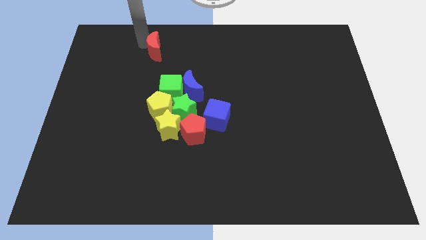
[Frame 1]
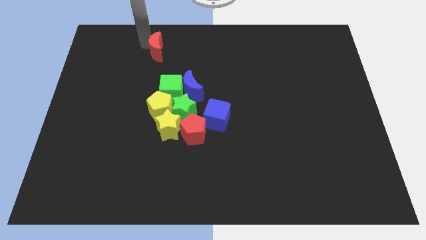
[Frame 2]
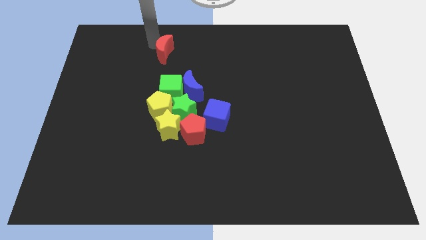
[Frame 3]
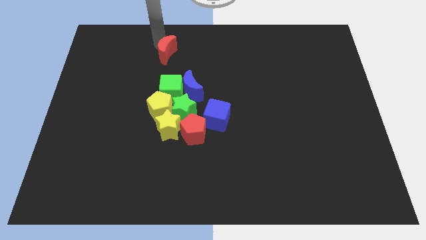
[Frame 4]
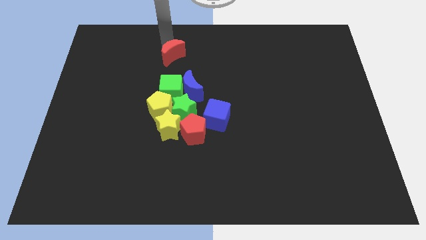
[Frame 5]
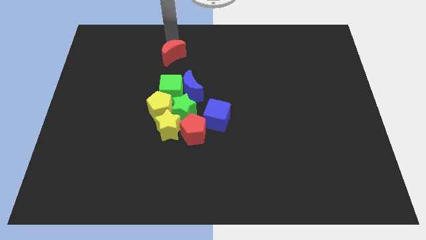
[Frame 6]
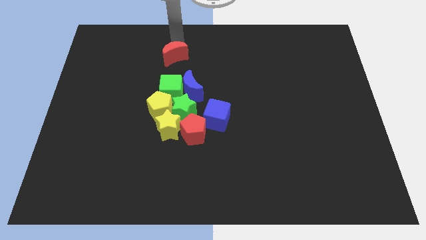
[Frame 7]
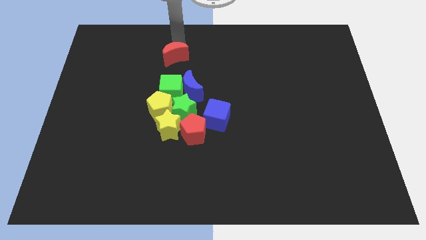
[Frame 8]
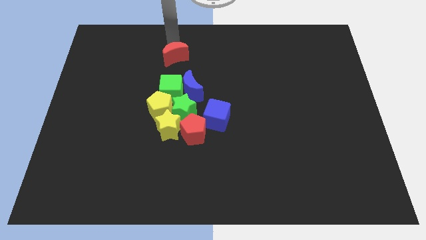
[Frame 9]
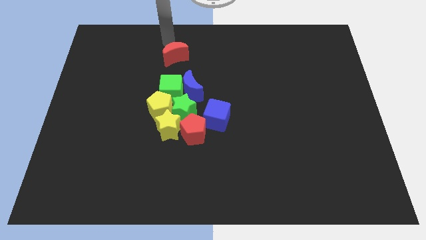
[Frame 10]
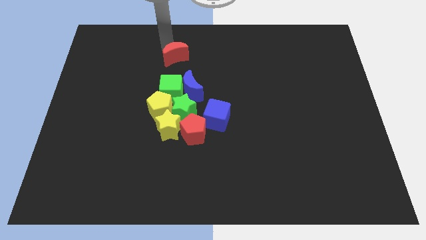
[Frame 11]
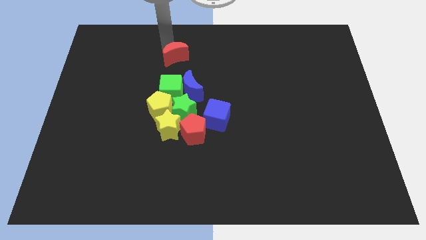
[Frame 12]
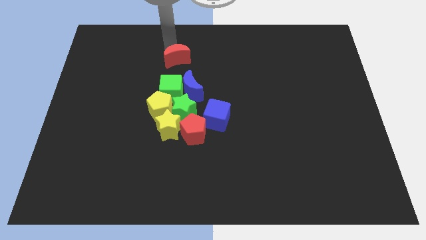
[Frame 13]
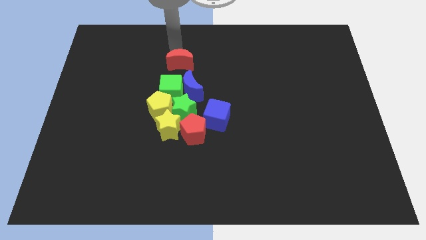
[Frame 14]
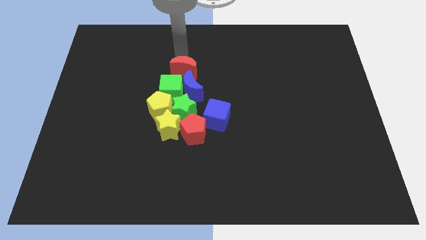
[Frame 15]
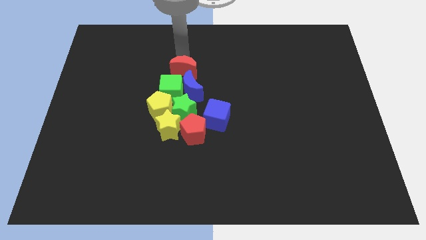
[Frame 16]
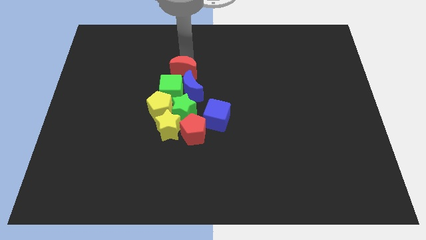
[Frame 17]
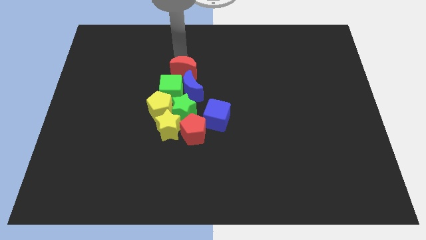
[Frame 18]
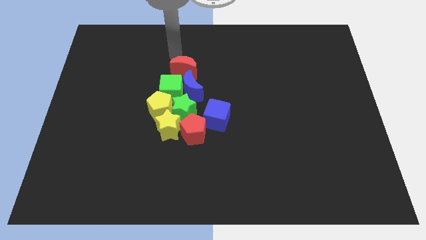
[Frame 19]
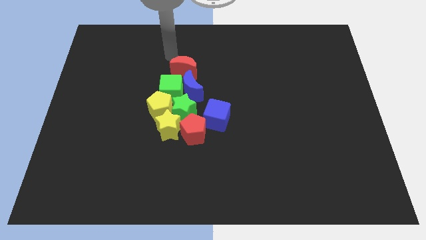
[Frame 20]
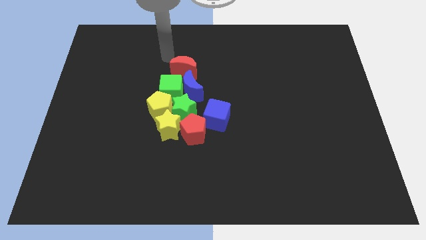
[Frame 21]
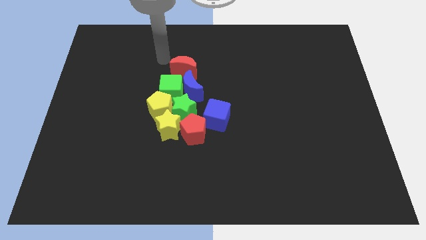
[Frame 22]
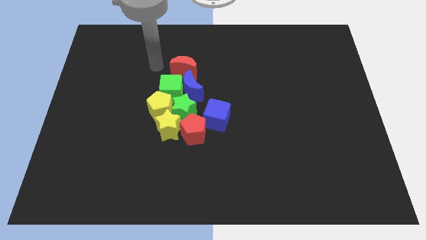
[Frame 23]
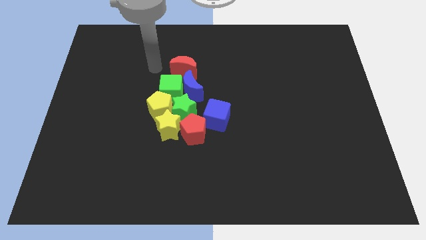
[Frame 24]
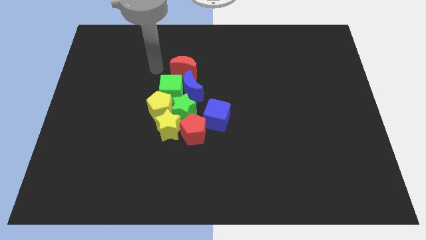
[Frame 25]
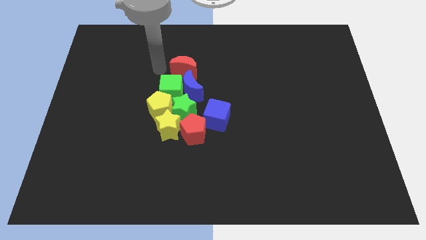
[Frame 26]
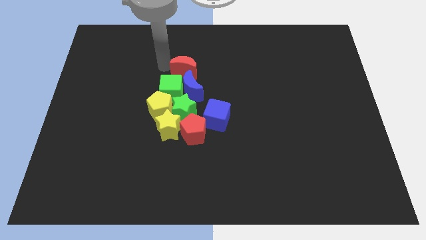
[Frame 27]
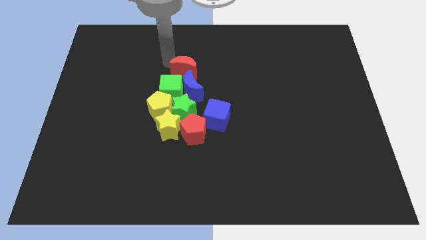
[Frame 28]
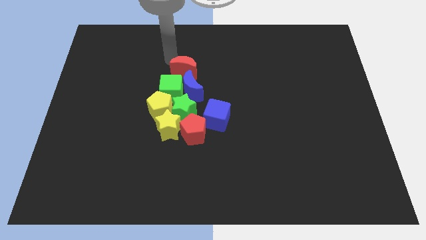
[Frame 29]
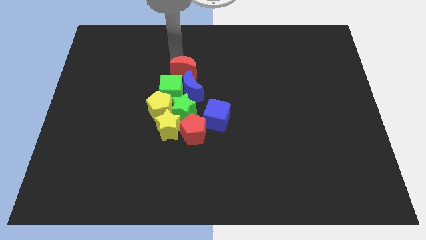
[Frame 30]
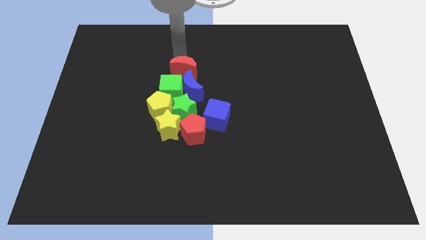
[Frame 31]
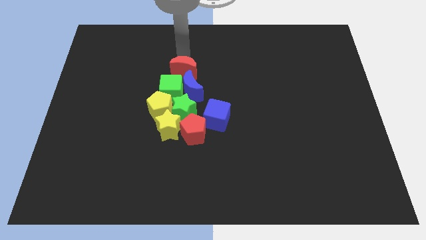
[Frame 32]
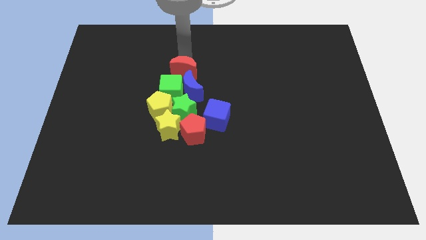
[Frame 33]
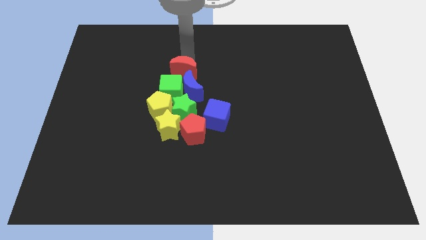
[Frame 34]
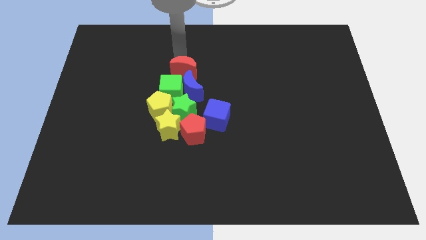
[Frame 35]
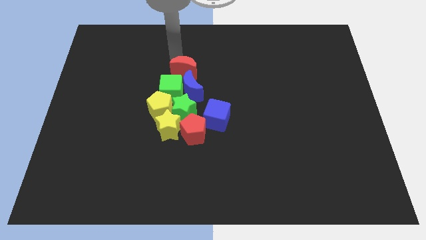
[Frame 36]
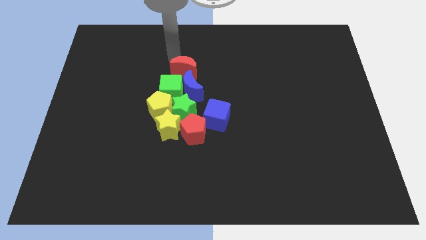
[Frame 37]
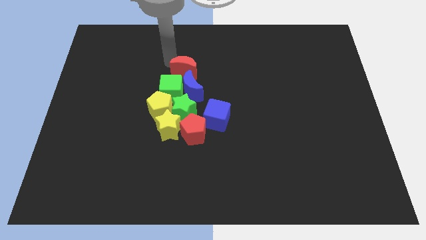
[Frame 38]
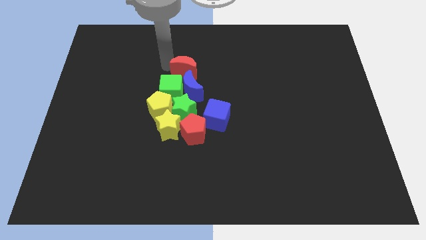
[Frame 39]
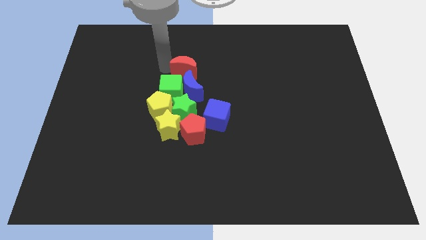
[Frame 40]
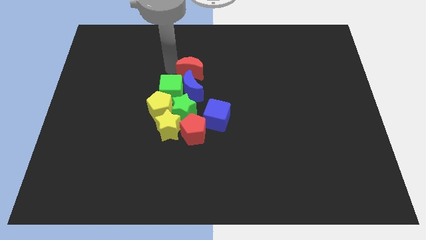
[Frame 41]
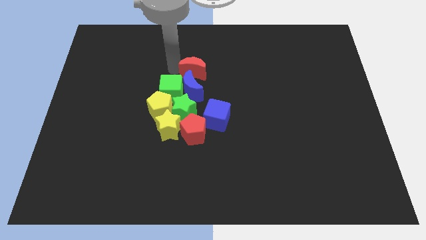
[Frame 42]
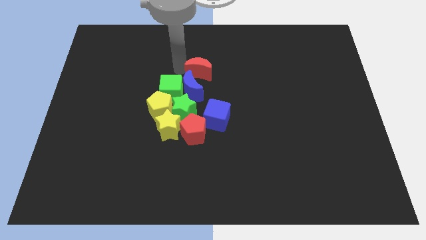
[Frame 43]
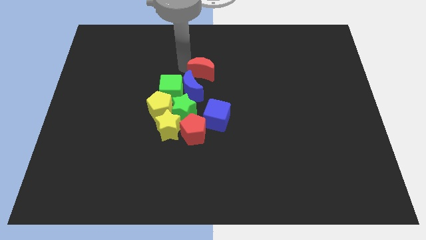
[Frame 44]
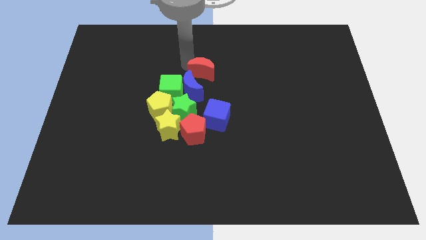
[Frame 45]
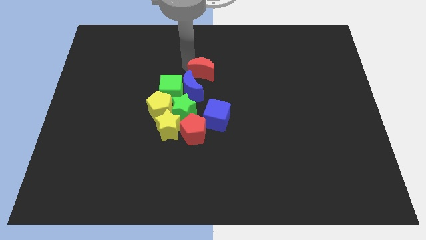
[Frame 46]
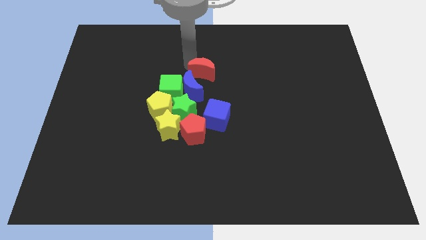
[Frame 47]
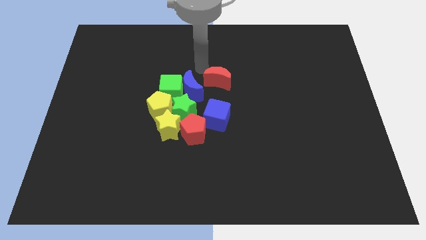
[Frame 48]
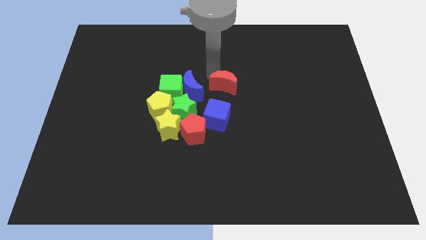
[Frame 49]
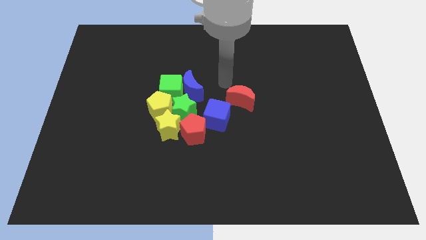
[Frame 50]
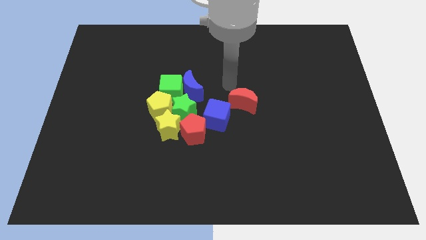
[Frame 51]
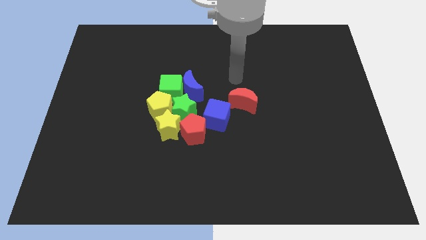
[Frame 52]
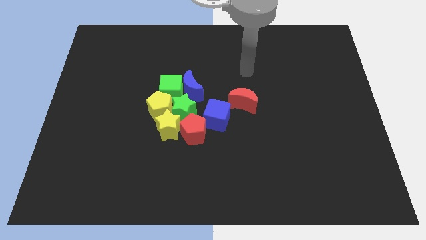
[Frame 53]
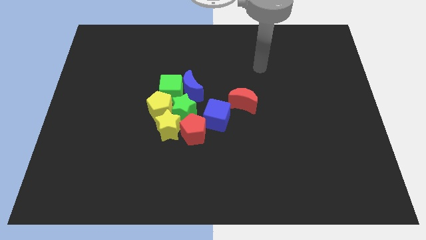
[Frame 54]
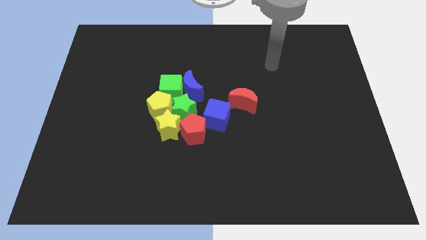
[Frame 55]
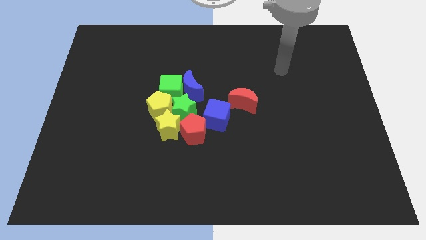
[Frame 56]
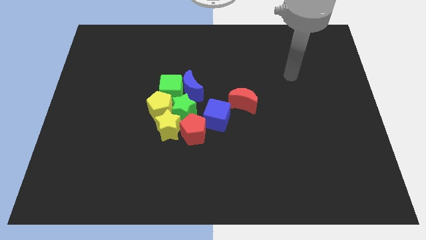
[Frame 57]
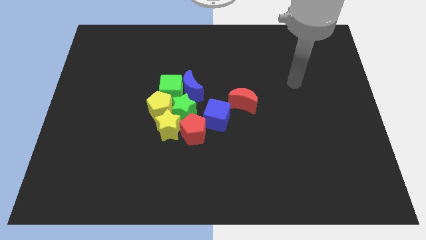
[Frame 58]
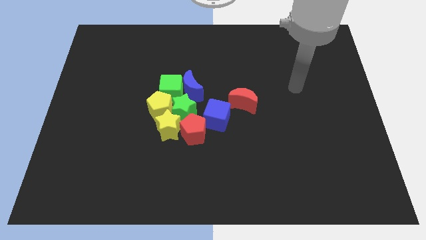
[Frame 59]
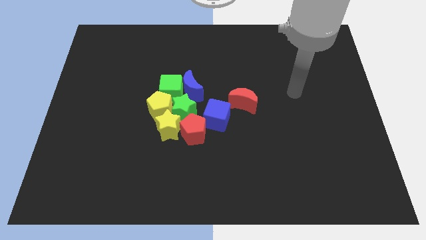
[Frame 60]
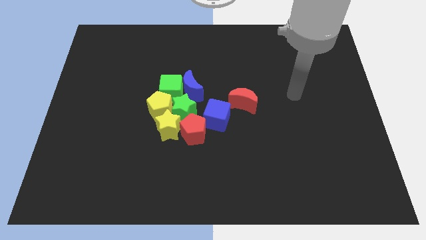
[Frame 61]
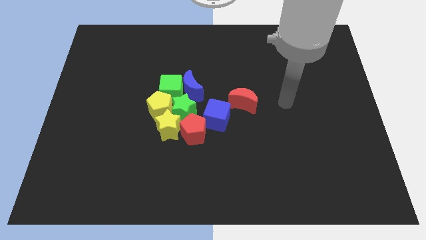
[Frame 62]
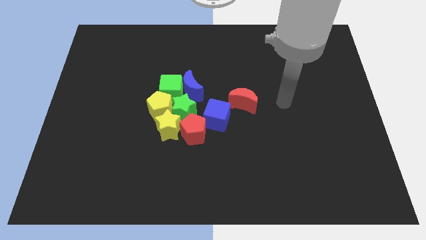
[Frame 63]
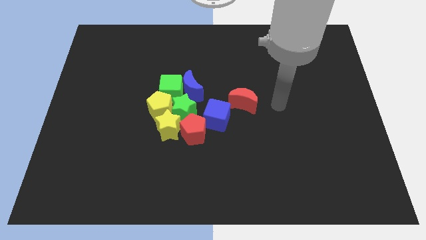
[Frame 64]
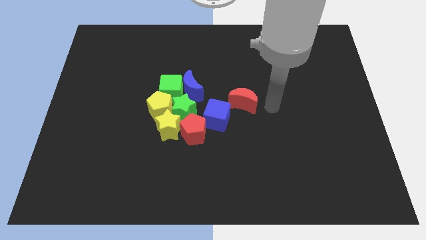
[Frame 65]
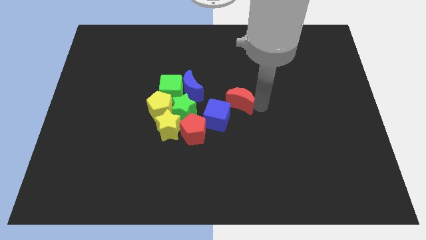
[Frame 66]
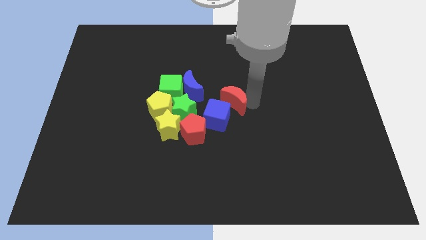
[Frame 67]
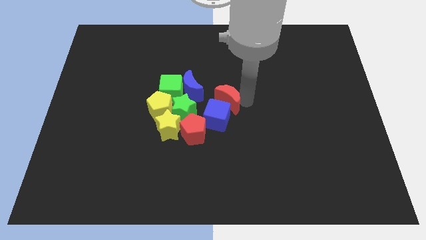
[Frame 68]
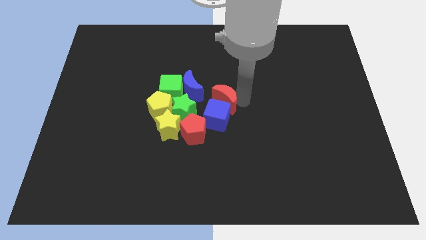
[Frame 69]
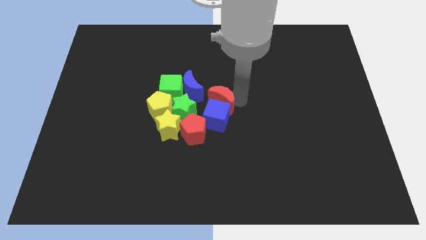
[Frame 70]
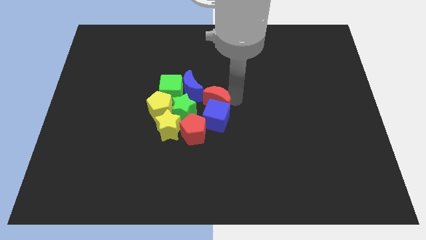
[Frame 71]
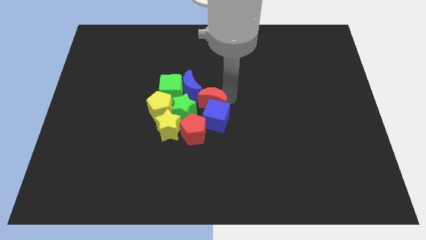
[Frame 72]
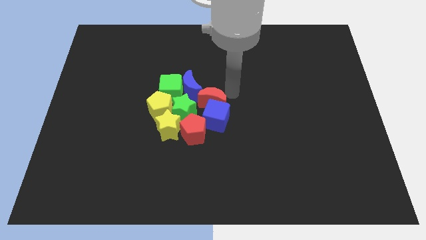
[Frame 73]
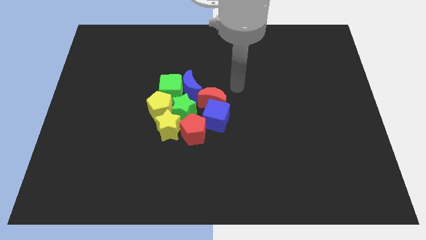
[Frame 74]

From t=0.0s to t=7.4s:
move the red crescent to the center of the board

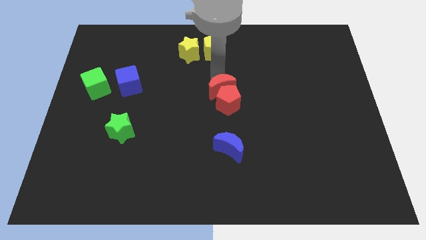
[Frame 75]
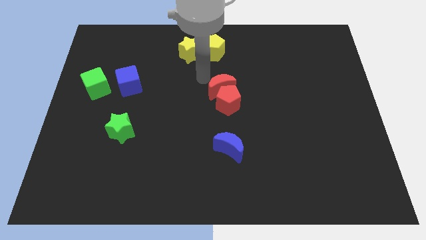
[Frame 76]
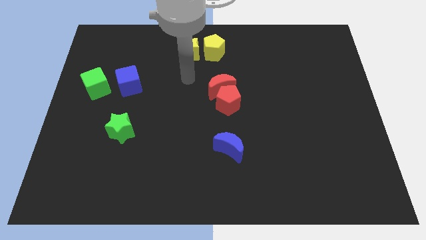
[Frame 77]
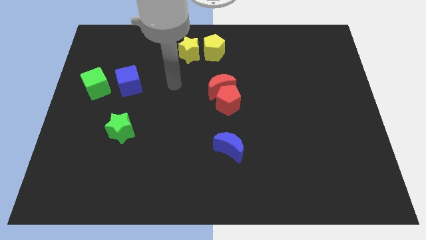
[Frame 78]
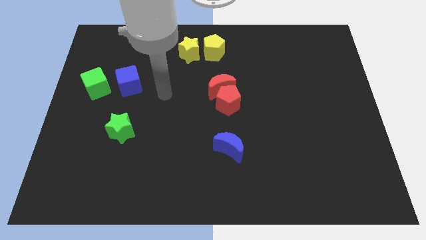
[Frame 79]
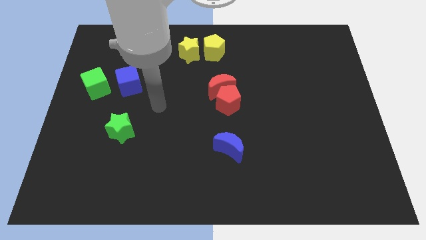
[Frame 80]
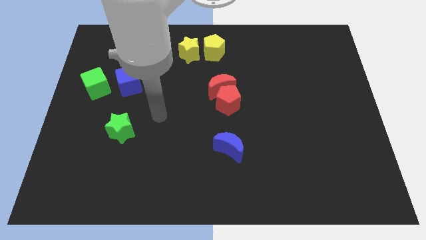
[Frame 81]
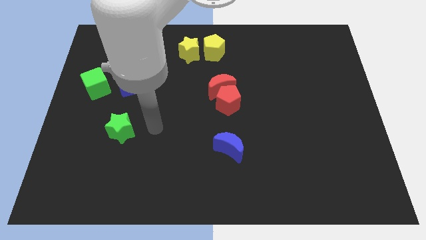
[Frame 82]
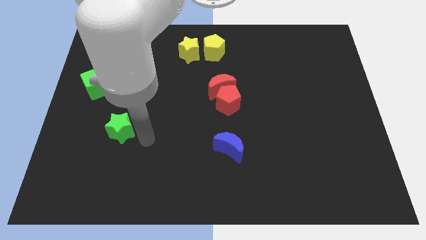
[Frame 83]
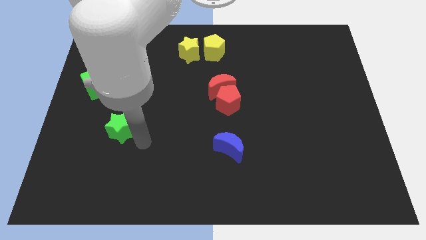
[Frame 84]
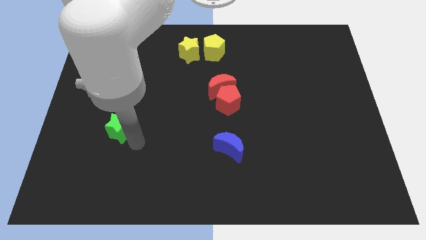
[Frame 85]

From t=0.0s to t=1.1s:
move your arm away from the red moon

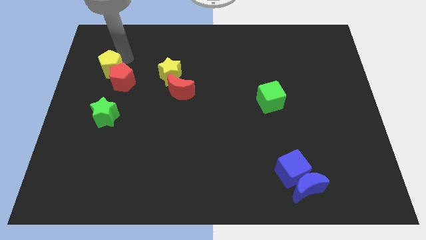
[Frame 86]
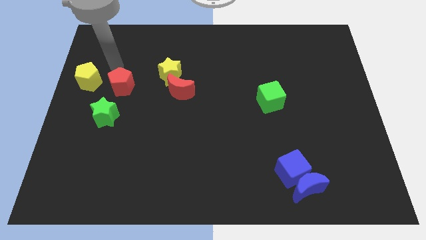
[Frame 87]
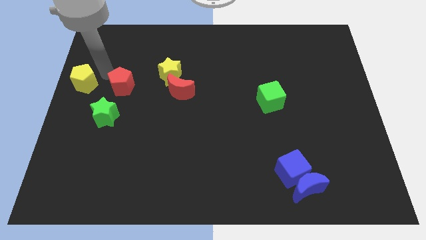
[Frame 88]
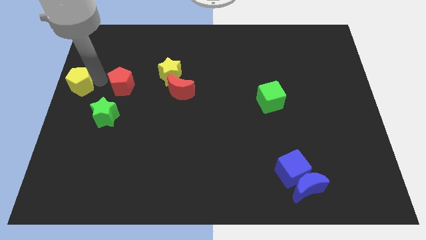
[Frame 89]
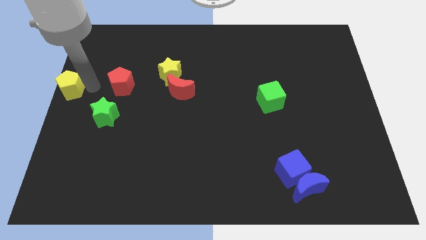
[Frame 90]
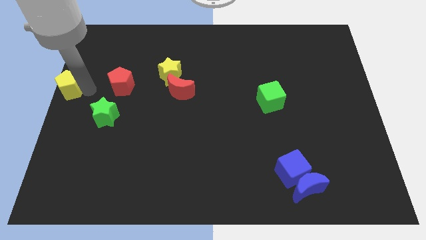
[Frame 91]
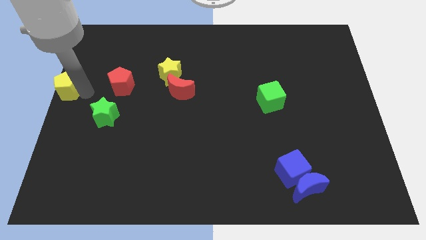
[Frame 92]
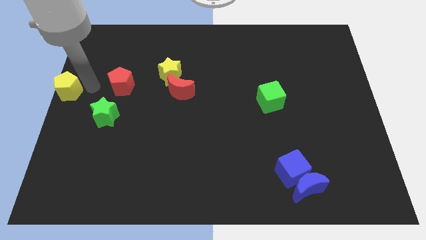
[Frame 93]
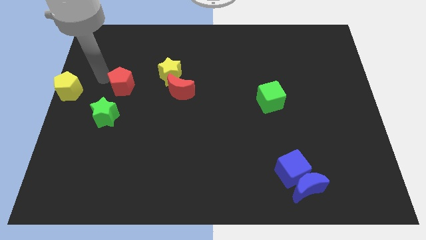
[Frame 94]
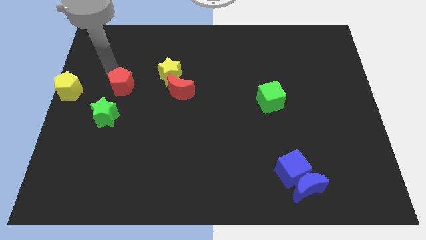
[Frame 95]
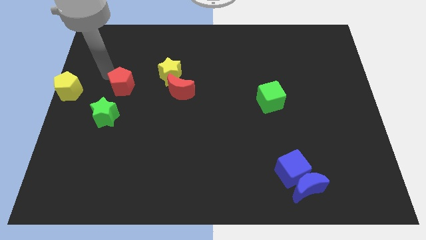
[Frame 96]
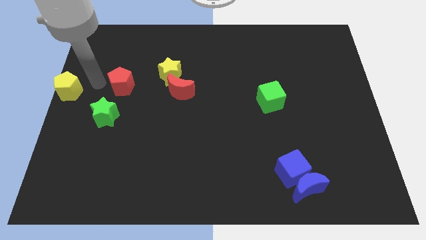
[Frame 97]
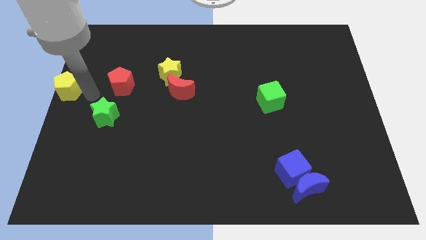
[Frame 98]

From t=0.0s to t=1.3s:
push the yellow pentagon to the centre left of the board
